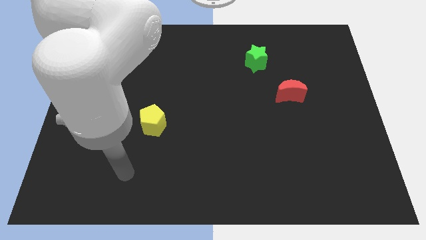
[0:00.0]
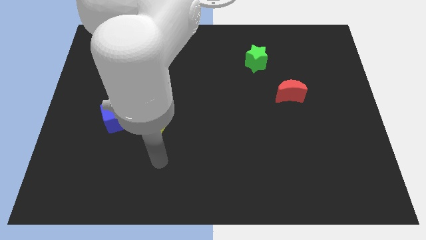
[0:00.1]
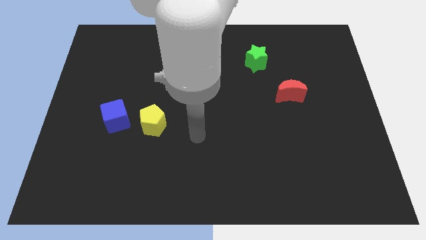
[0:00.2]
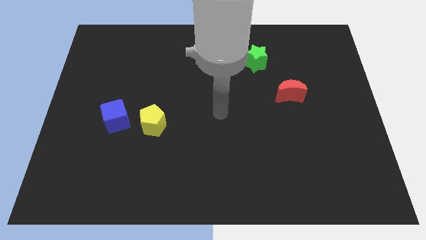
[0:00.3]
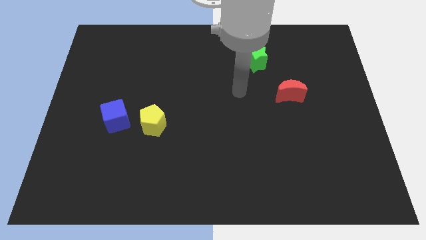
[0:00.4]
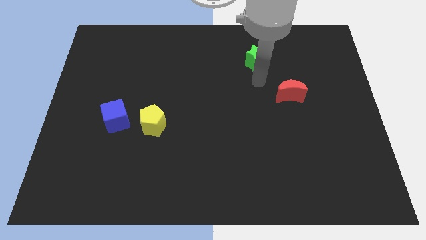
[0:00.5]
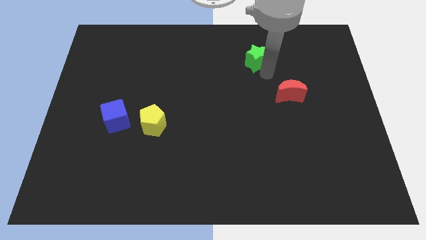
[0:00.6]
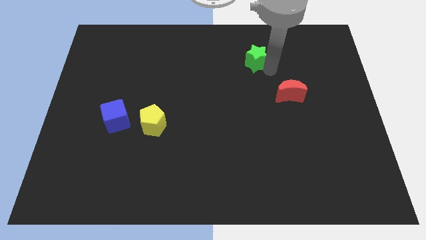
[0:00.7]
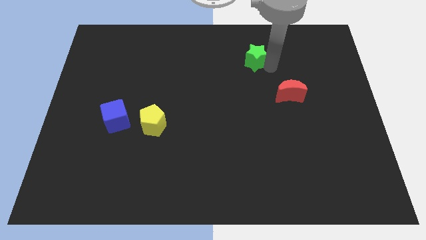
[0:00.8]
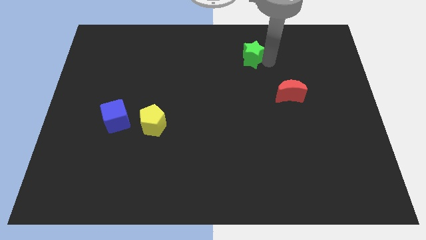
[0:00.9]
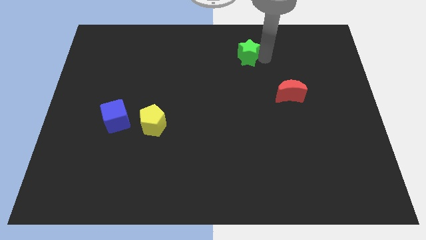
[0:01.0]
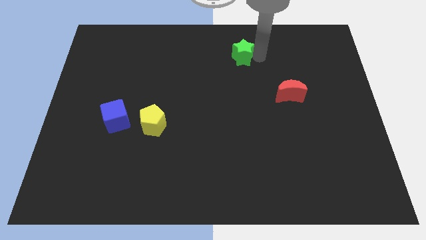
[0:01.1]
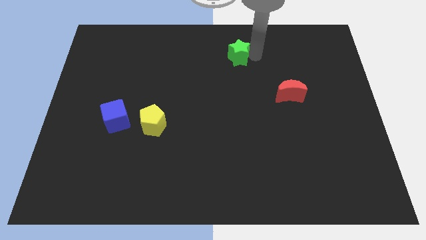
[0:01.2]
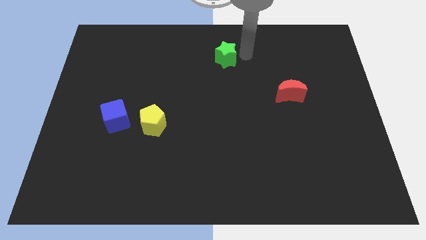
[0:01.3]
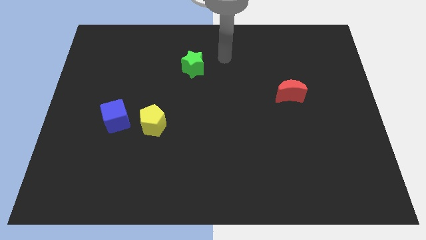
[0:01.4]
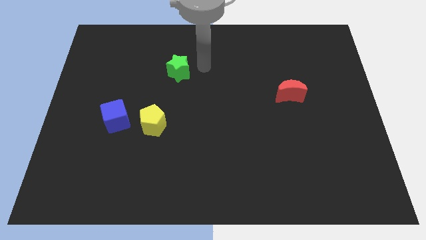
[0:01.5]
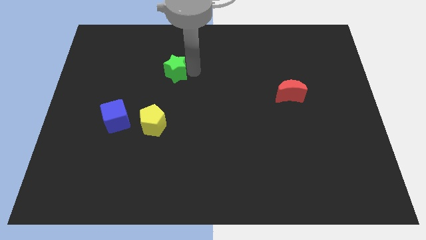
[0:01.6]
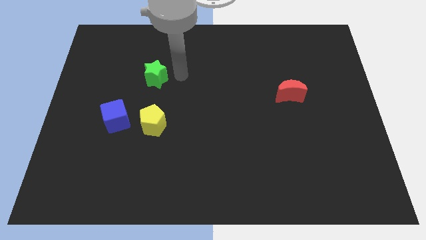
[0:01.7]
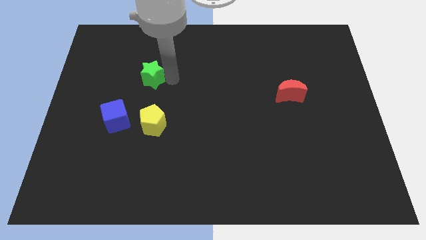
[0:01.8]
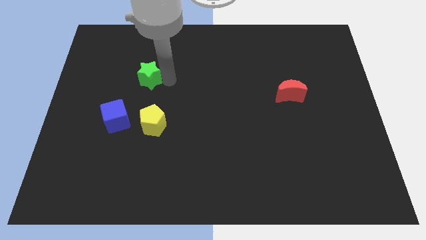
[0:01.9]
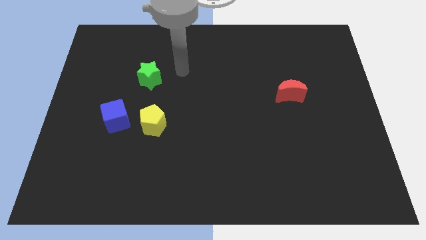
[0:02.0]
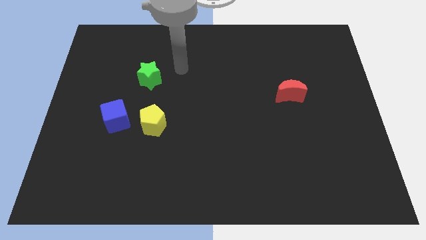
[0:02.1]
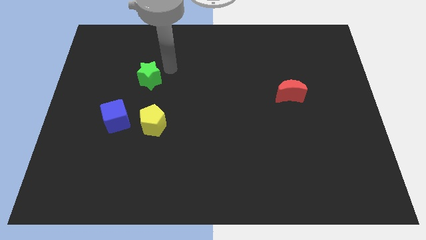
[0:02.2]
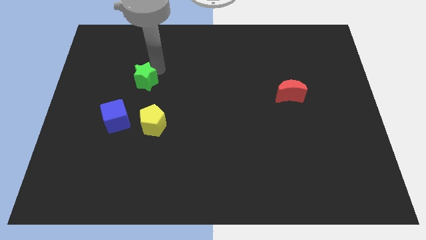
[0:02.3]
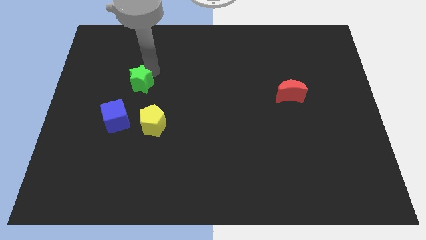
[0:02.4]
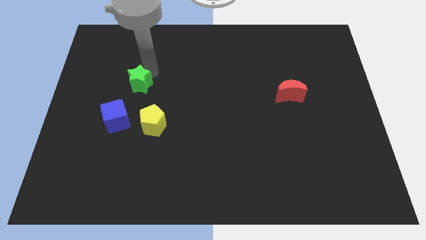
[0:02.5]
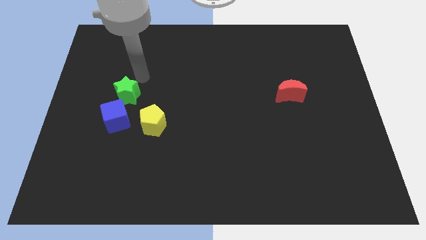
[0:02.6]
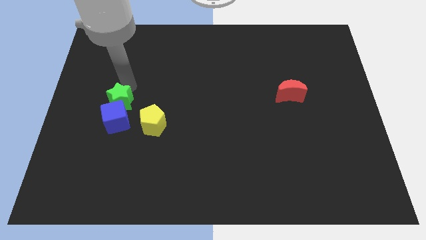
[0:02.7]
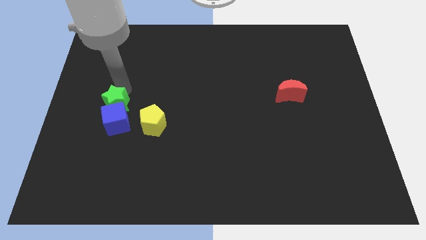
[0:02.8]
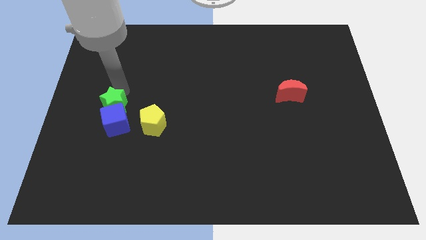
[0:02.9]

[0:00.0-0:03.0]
push the green star towards the blue block

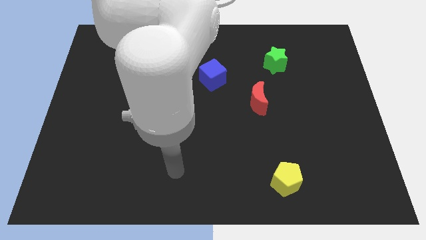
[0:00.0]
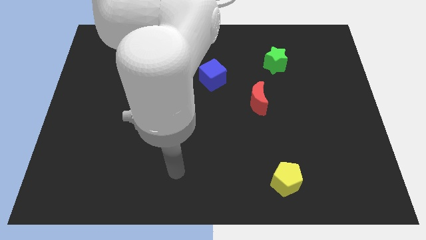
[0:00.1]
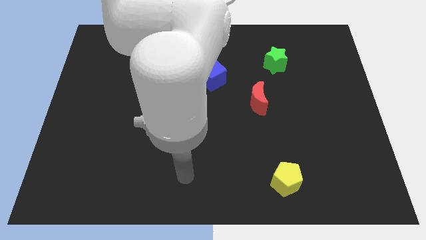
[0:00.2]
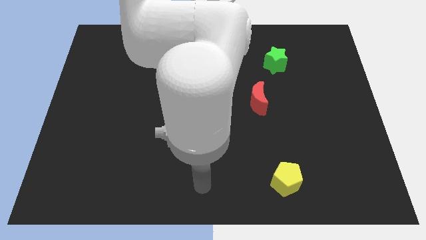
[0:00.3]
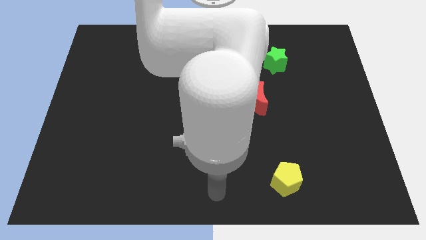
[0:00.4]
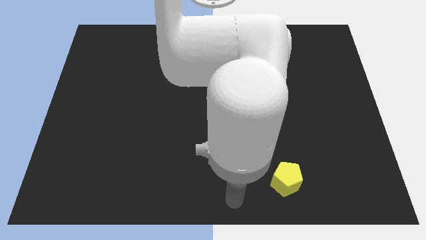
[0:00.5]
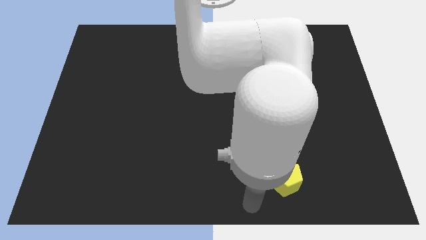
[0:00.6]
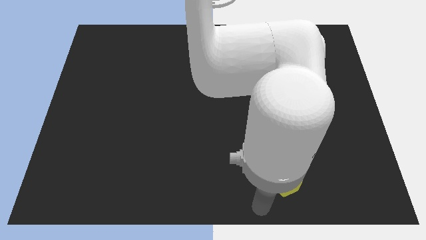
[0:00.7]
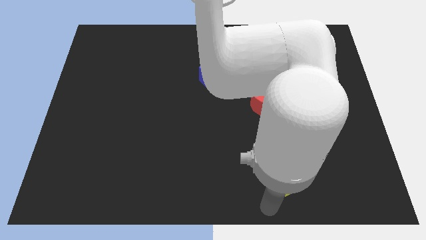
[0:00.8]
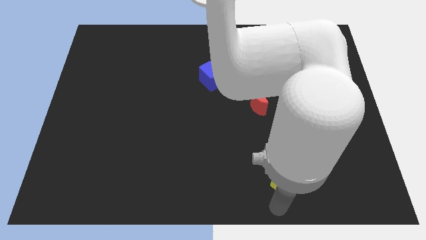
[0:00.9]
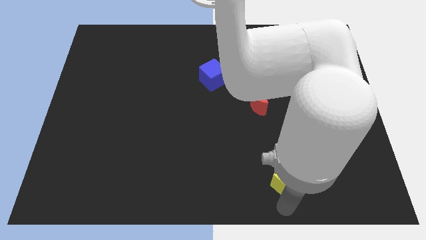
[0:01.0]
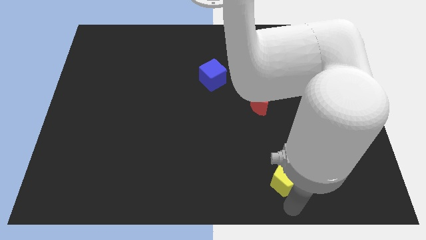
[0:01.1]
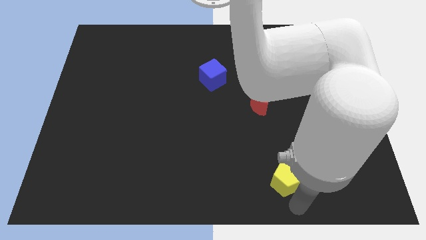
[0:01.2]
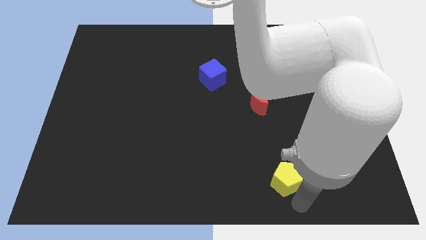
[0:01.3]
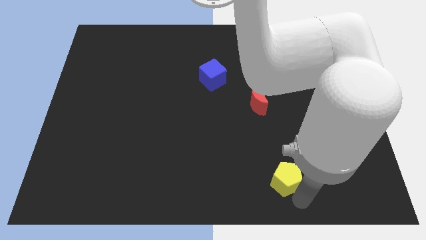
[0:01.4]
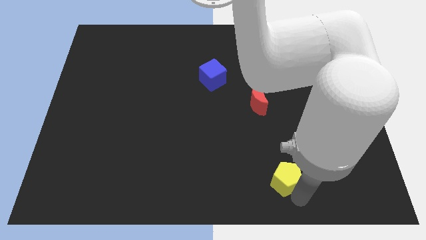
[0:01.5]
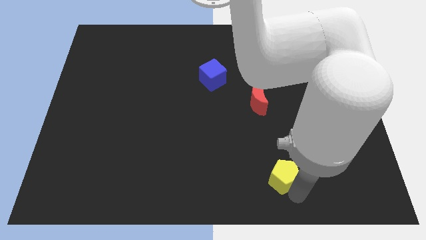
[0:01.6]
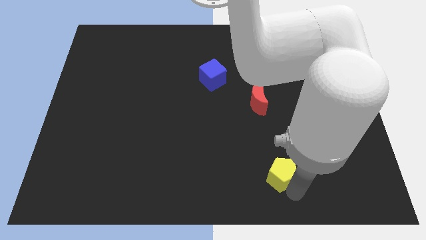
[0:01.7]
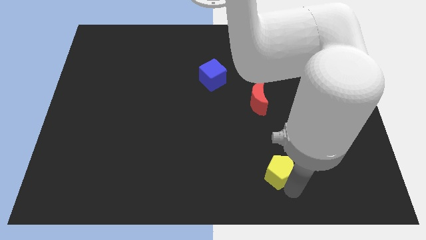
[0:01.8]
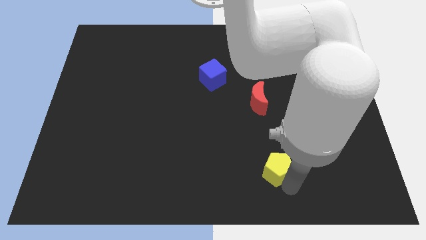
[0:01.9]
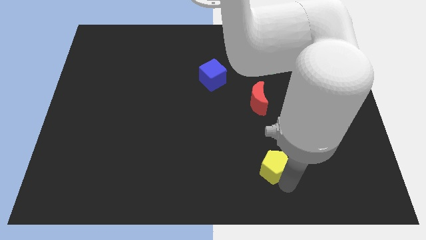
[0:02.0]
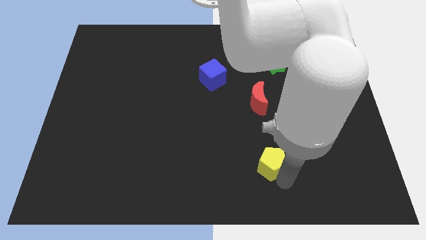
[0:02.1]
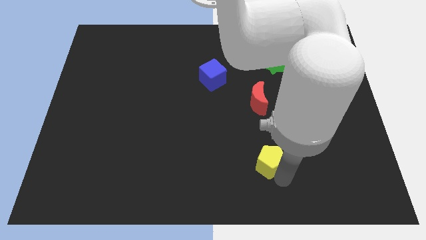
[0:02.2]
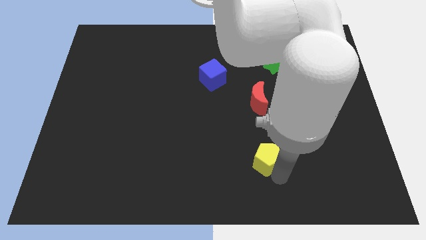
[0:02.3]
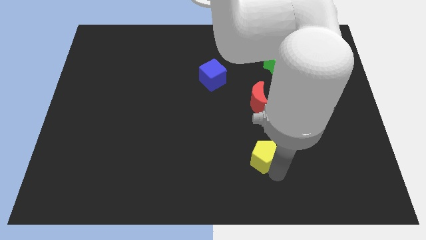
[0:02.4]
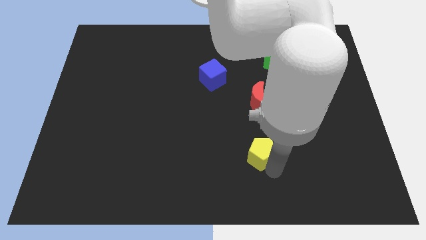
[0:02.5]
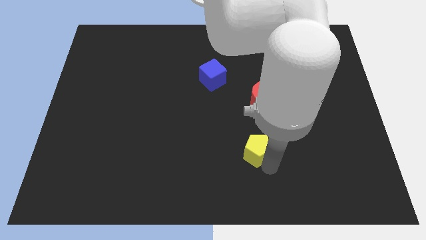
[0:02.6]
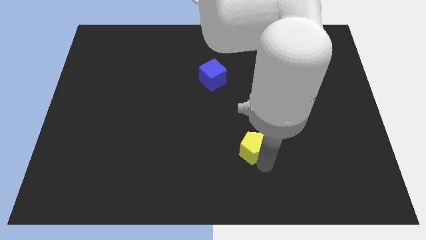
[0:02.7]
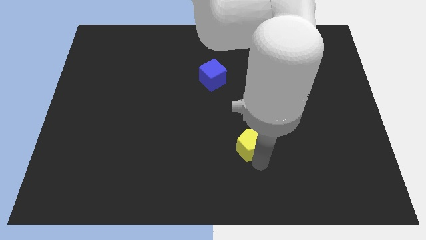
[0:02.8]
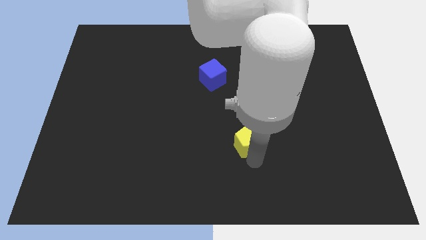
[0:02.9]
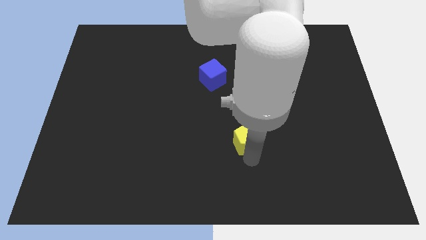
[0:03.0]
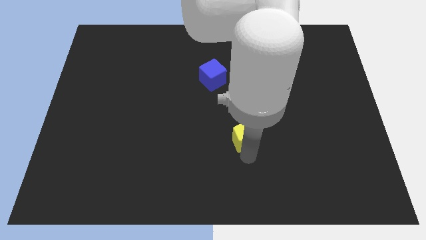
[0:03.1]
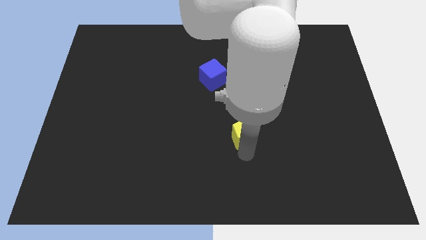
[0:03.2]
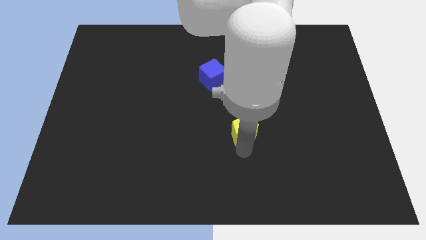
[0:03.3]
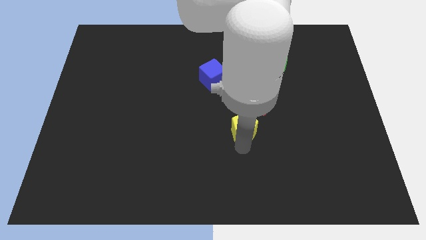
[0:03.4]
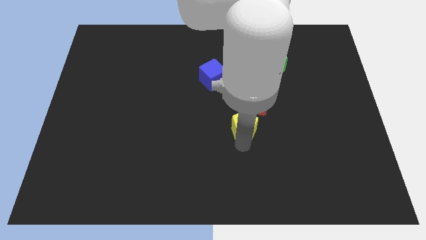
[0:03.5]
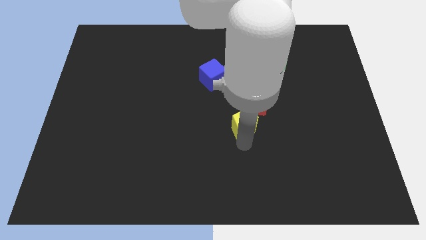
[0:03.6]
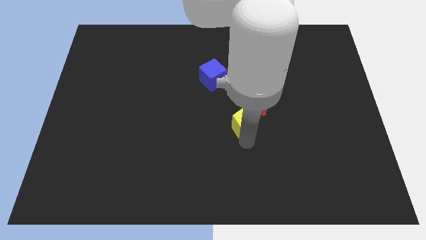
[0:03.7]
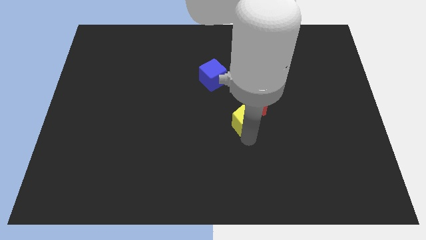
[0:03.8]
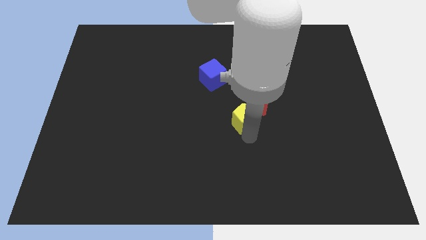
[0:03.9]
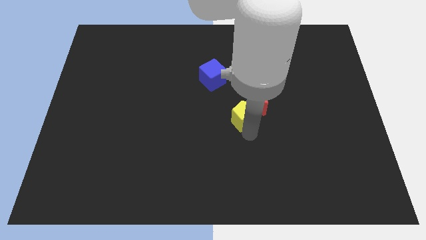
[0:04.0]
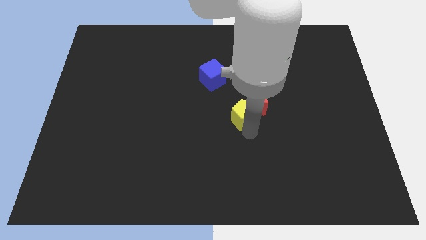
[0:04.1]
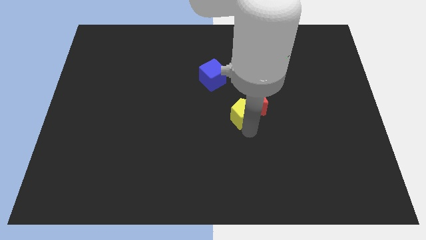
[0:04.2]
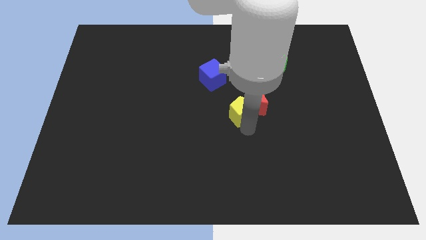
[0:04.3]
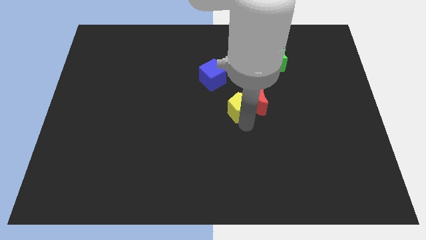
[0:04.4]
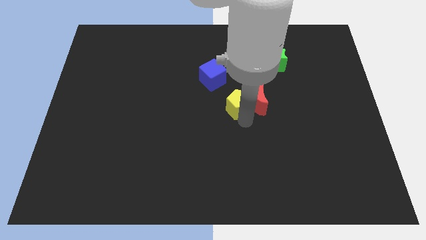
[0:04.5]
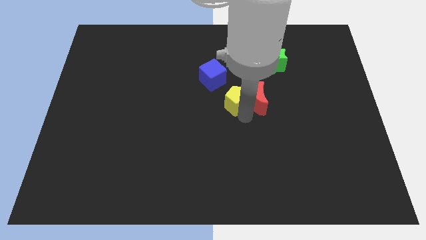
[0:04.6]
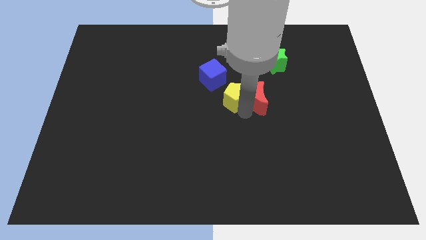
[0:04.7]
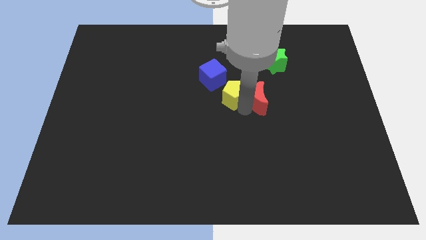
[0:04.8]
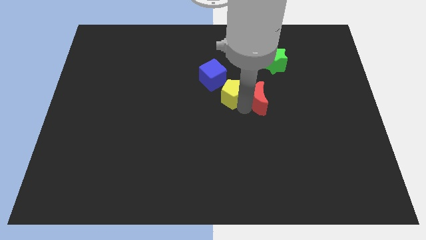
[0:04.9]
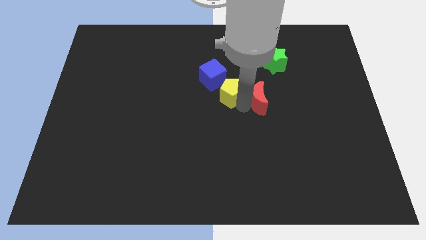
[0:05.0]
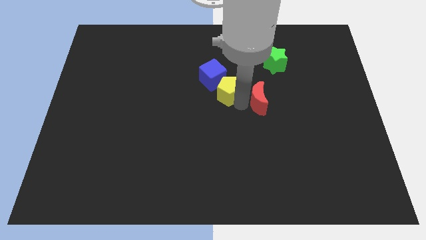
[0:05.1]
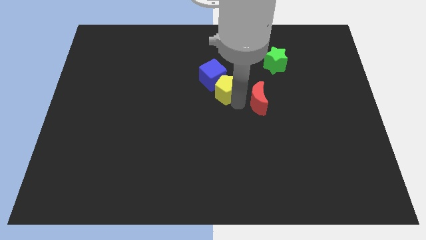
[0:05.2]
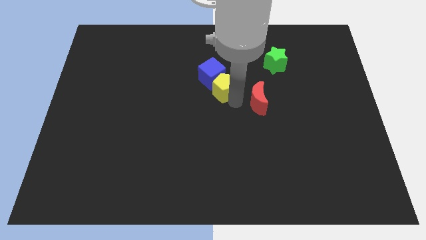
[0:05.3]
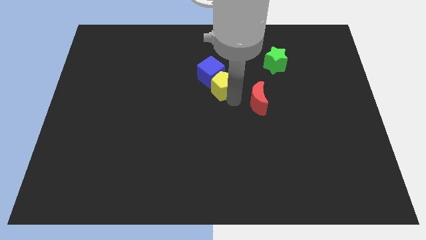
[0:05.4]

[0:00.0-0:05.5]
slide the pentagon to the cube
